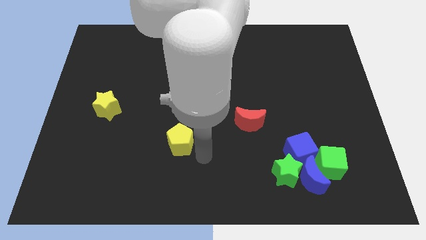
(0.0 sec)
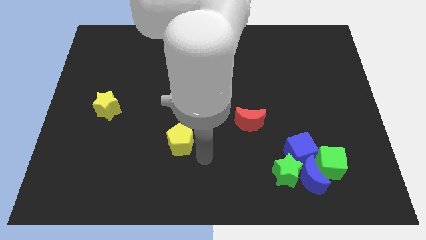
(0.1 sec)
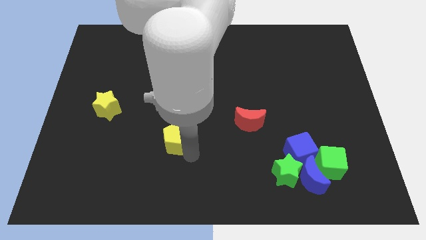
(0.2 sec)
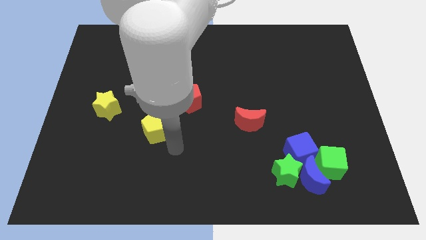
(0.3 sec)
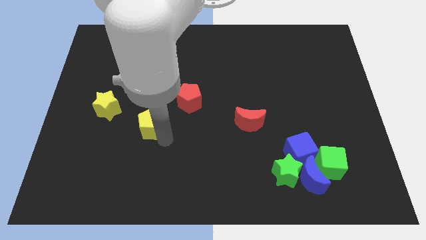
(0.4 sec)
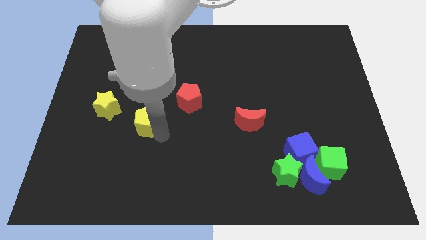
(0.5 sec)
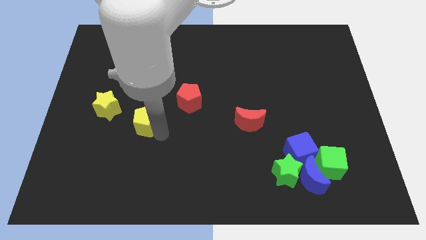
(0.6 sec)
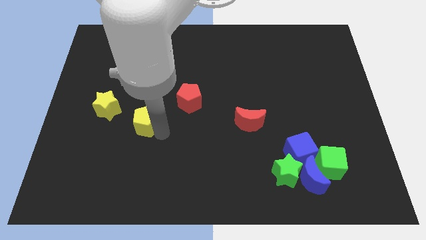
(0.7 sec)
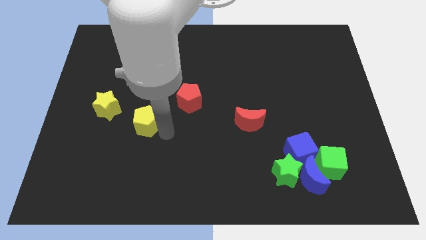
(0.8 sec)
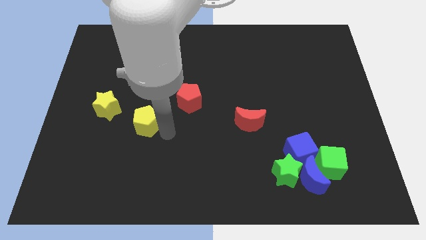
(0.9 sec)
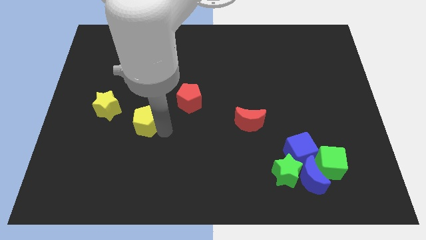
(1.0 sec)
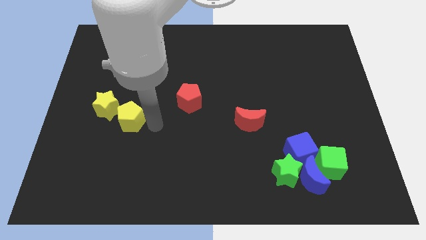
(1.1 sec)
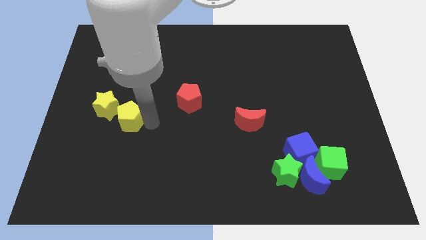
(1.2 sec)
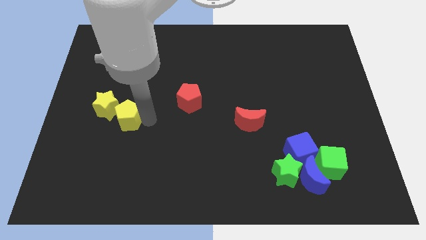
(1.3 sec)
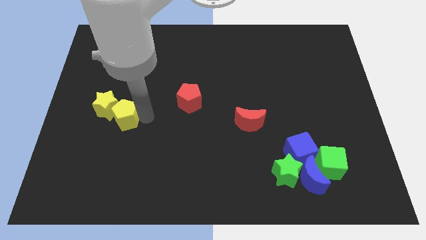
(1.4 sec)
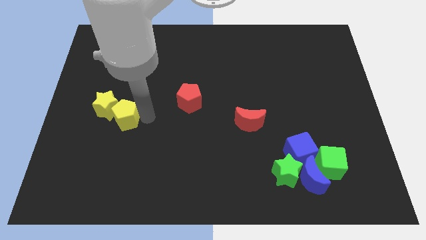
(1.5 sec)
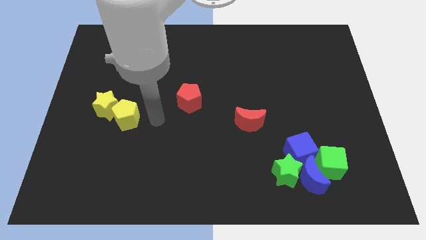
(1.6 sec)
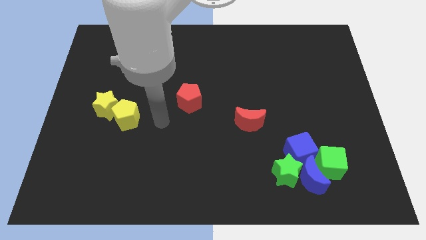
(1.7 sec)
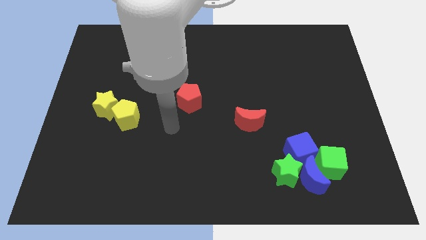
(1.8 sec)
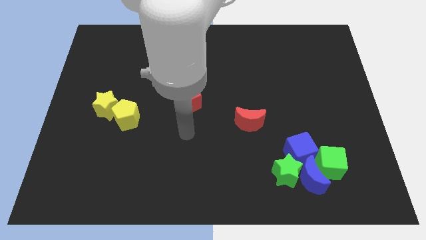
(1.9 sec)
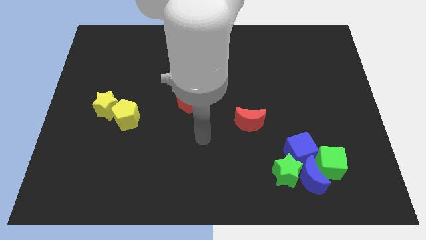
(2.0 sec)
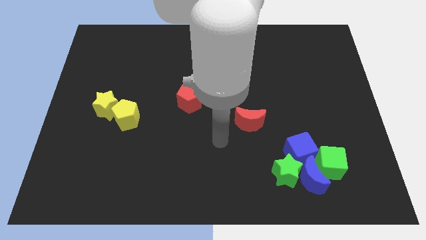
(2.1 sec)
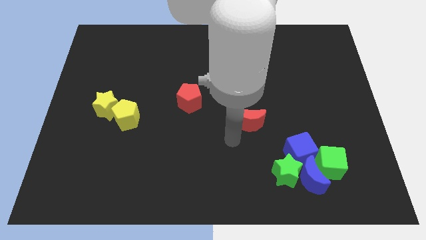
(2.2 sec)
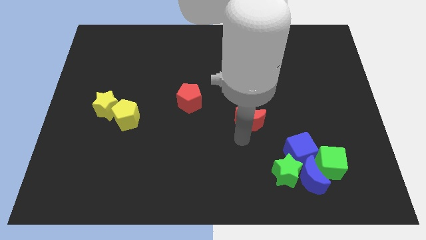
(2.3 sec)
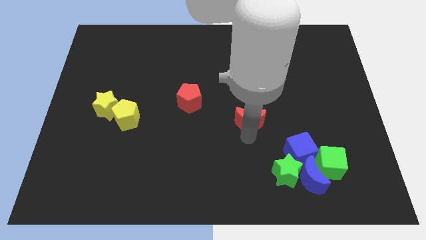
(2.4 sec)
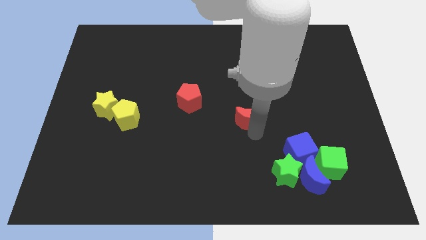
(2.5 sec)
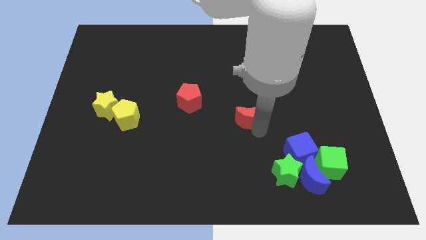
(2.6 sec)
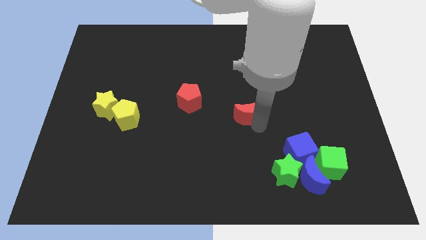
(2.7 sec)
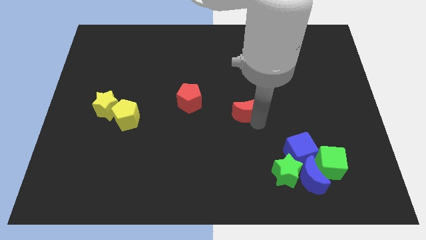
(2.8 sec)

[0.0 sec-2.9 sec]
move the yellow pentagon close to the yellow star

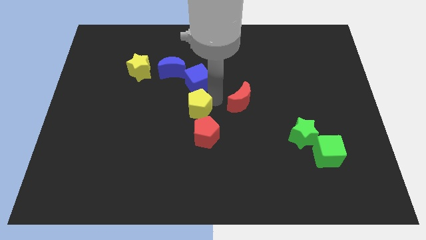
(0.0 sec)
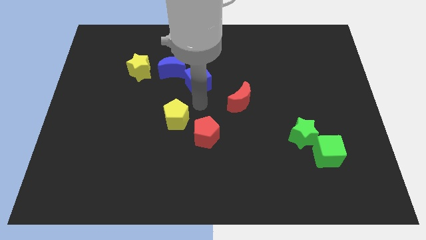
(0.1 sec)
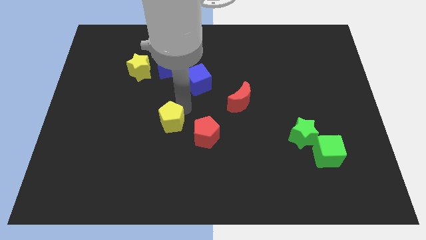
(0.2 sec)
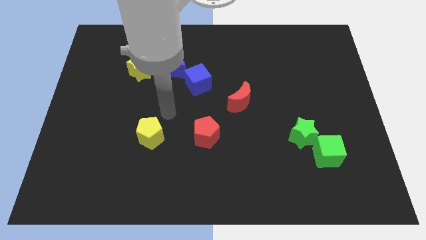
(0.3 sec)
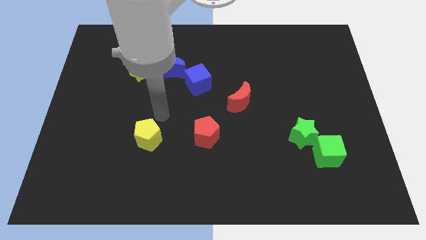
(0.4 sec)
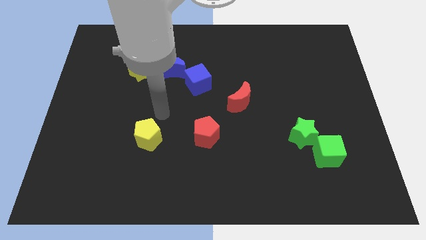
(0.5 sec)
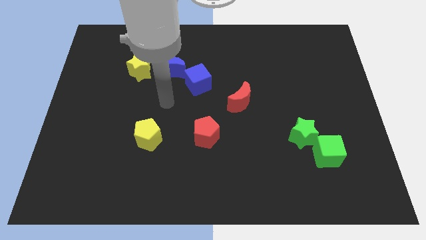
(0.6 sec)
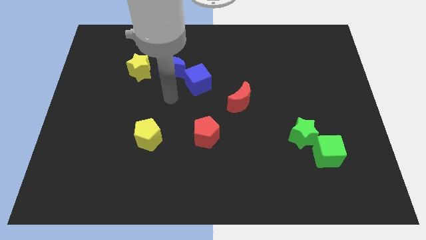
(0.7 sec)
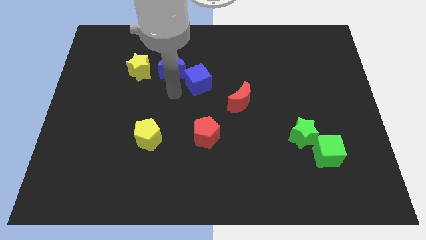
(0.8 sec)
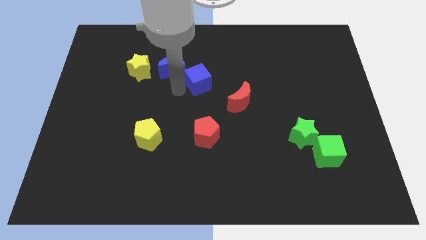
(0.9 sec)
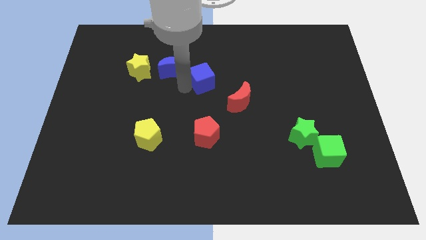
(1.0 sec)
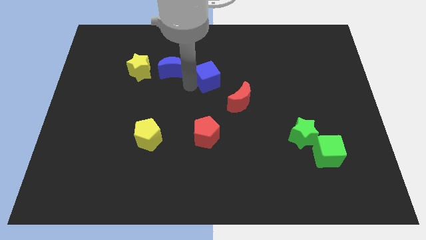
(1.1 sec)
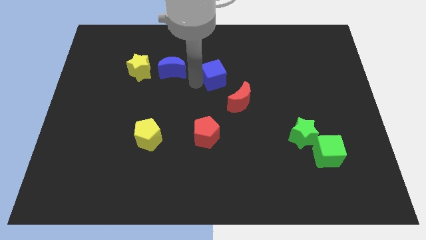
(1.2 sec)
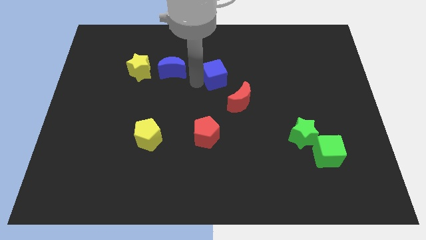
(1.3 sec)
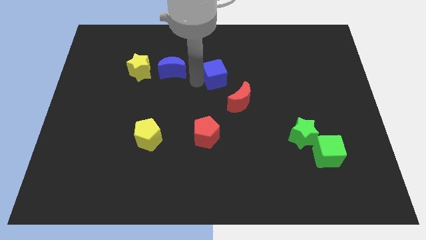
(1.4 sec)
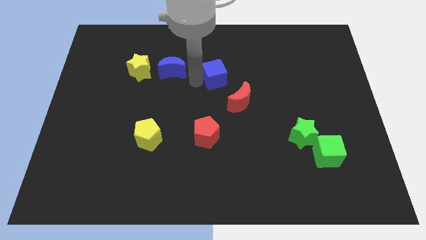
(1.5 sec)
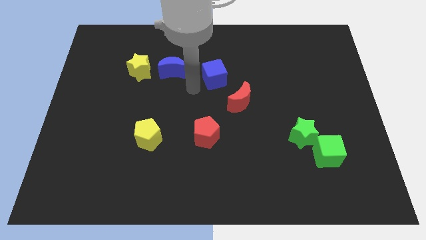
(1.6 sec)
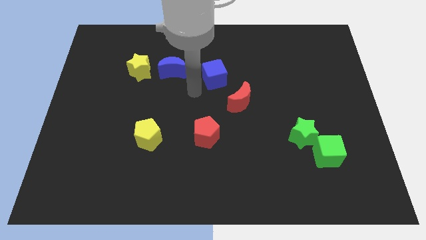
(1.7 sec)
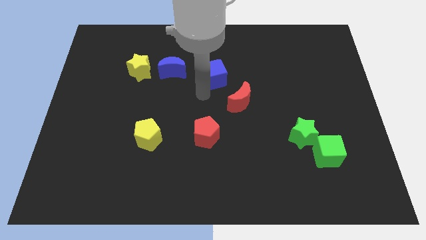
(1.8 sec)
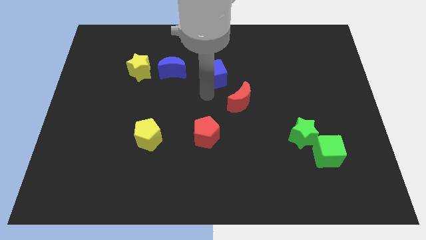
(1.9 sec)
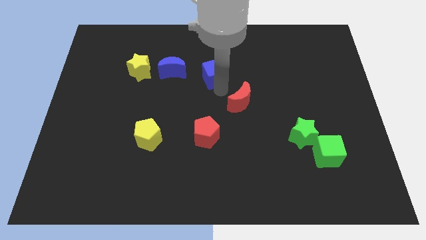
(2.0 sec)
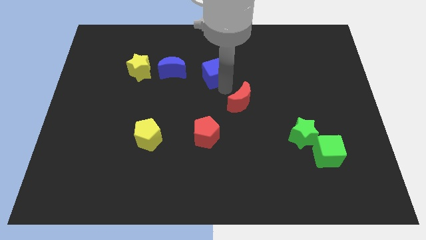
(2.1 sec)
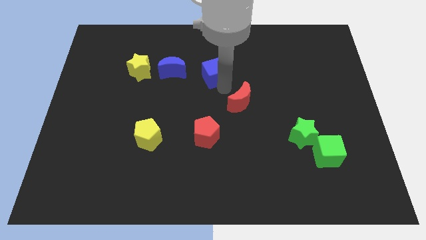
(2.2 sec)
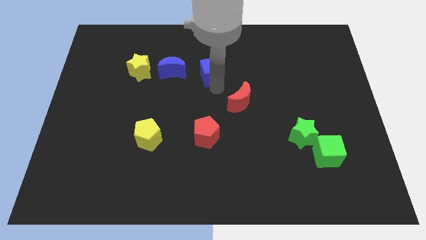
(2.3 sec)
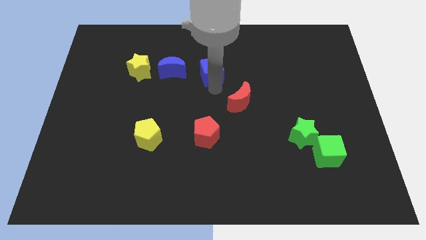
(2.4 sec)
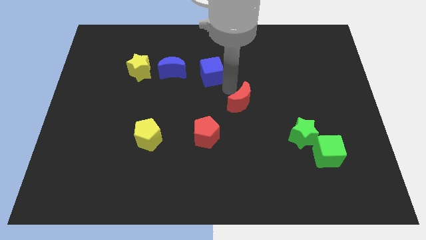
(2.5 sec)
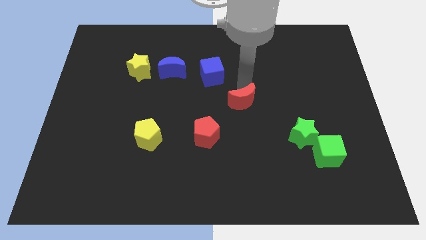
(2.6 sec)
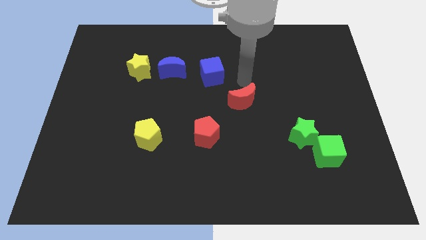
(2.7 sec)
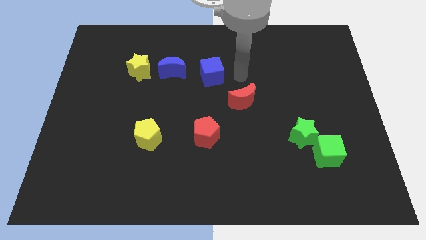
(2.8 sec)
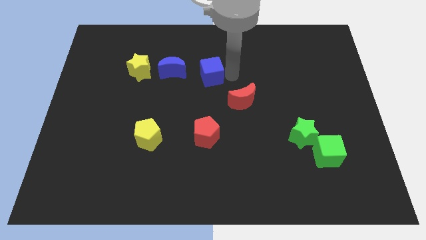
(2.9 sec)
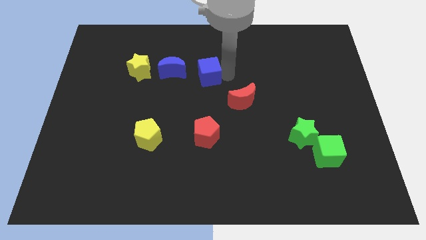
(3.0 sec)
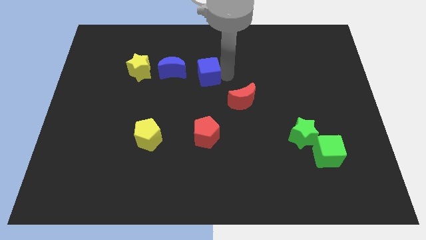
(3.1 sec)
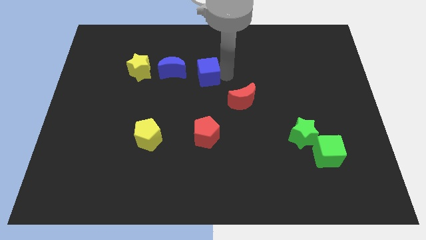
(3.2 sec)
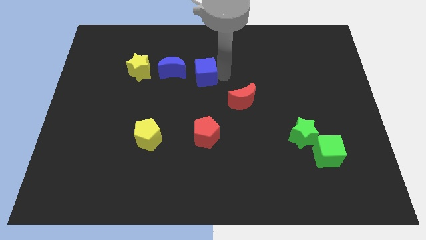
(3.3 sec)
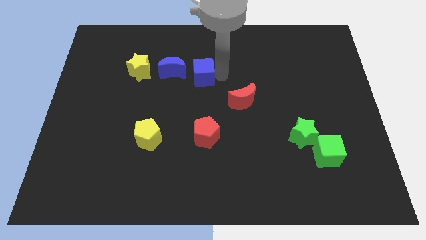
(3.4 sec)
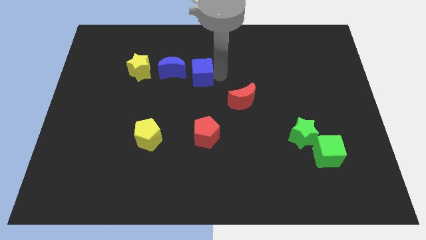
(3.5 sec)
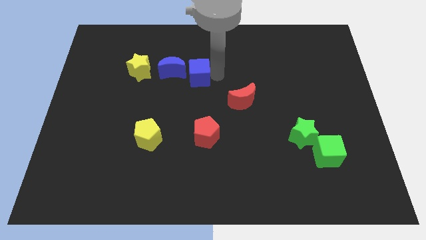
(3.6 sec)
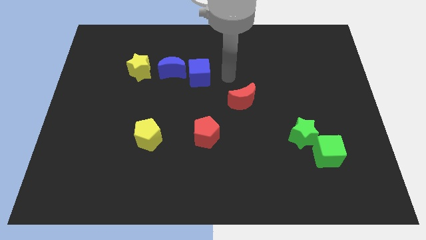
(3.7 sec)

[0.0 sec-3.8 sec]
move blue cube close to blue moon

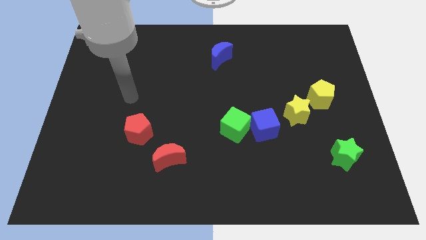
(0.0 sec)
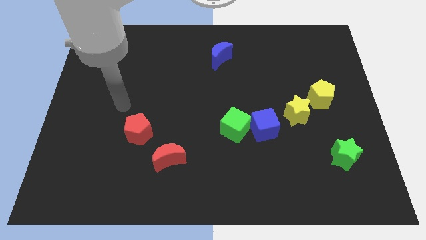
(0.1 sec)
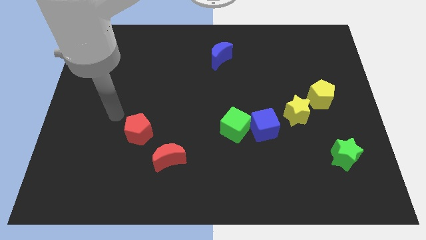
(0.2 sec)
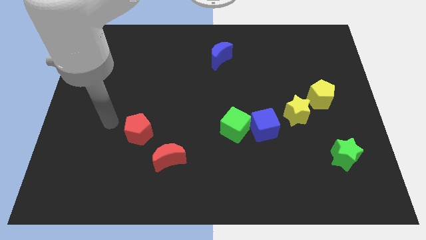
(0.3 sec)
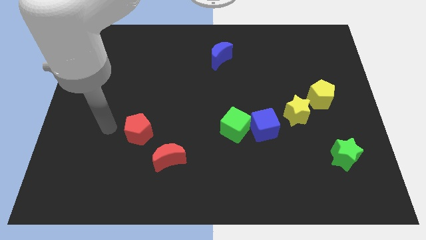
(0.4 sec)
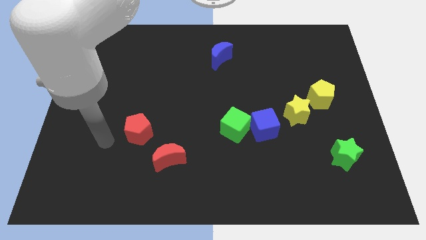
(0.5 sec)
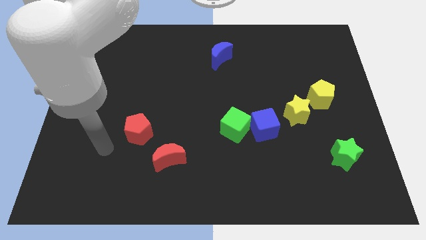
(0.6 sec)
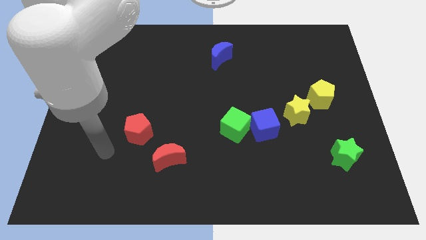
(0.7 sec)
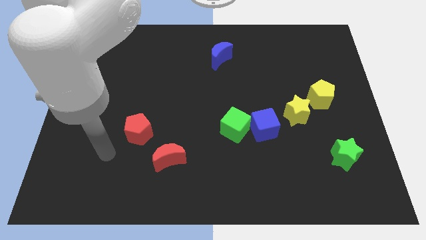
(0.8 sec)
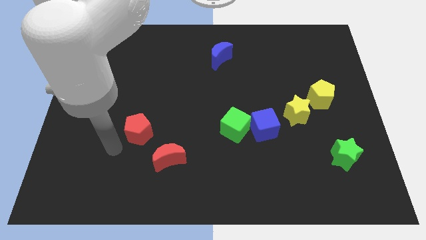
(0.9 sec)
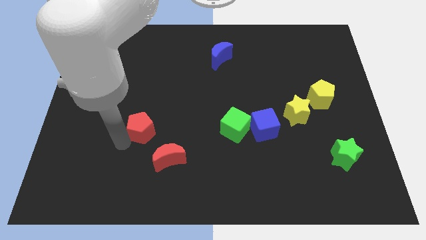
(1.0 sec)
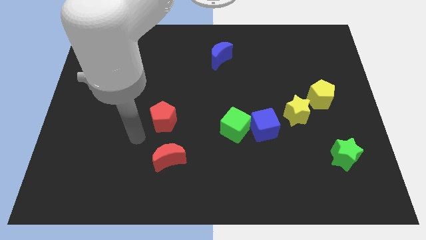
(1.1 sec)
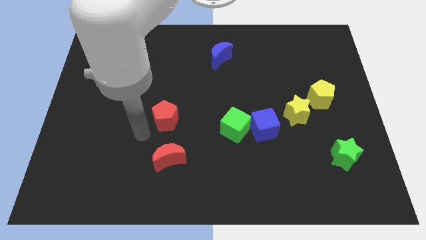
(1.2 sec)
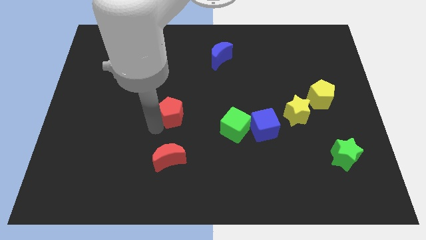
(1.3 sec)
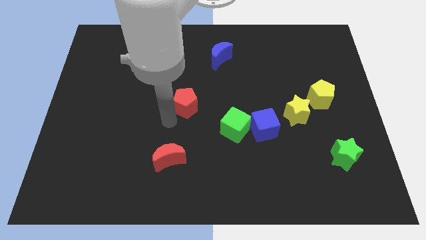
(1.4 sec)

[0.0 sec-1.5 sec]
move the red pentagon above the red moon

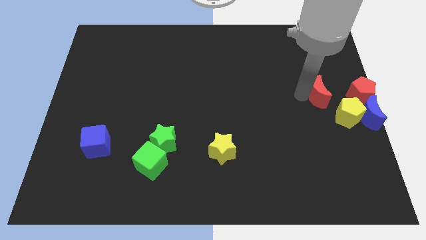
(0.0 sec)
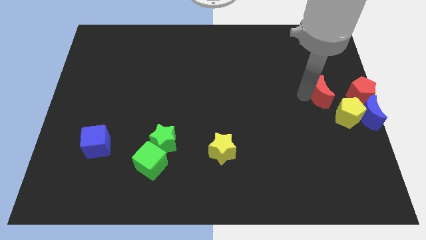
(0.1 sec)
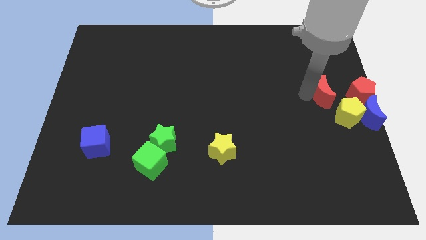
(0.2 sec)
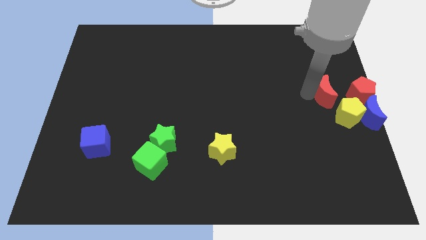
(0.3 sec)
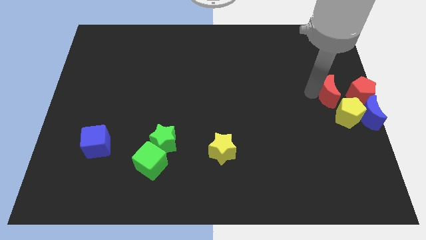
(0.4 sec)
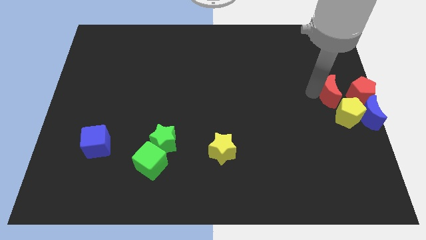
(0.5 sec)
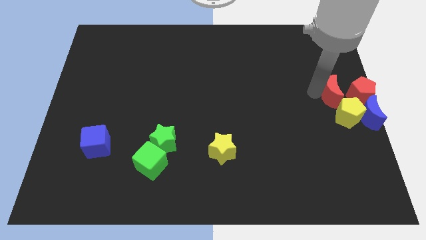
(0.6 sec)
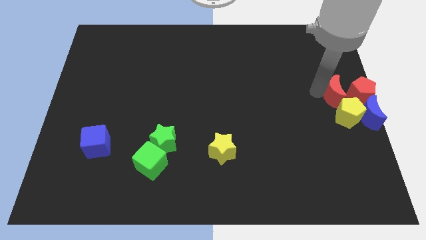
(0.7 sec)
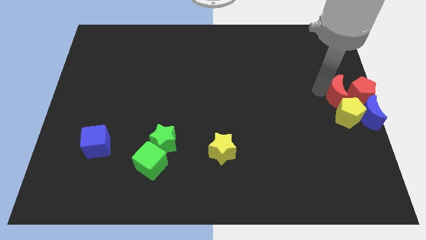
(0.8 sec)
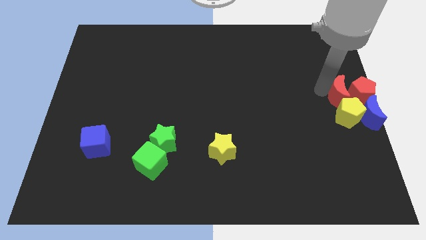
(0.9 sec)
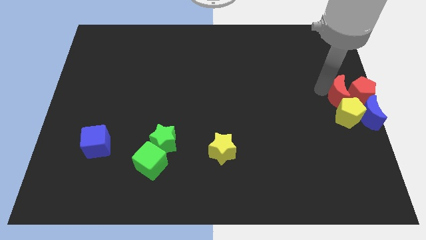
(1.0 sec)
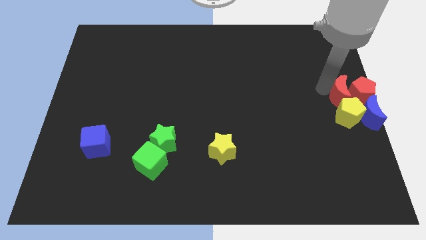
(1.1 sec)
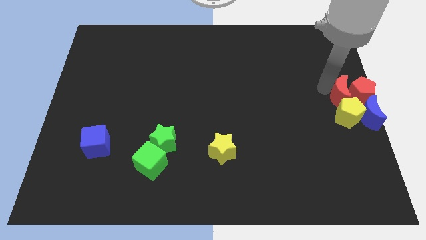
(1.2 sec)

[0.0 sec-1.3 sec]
move the red crescent towards the group of objects
